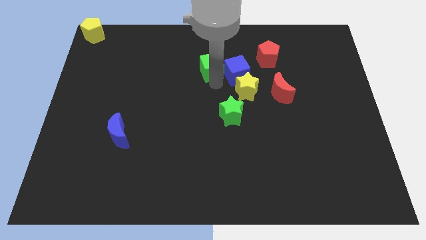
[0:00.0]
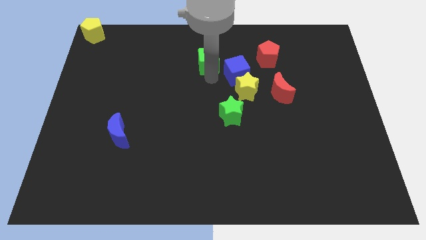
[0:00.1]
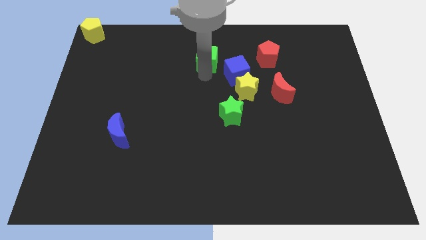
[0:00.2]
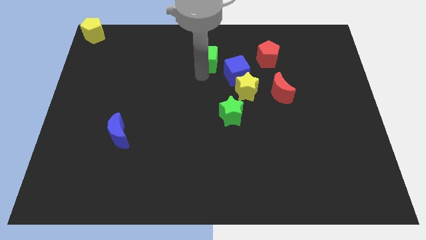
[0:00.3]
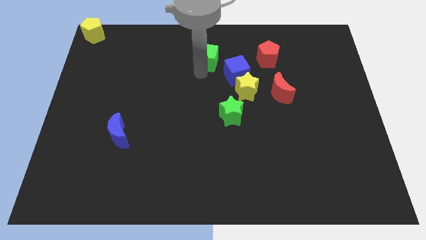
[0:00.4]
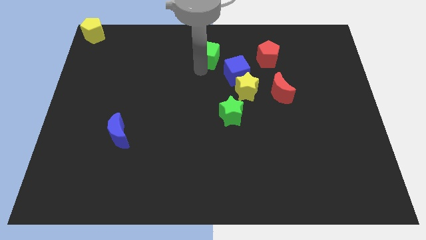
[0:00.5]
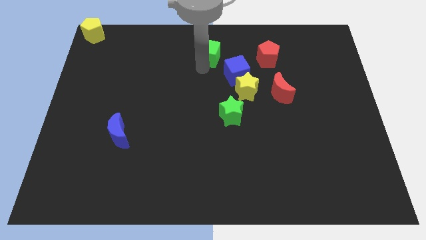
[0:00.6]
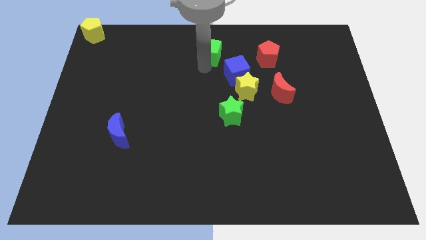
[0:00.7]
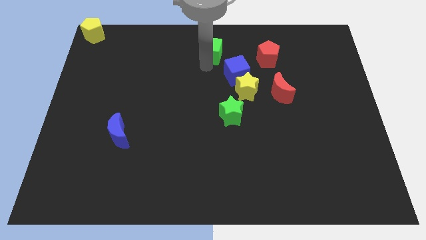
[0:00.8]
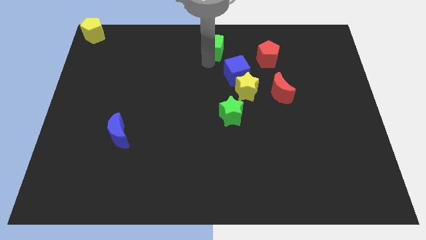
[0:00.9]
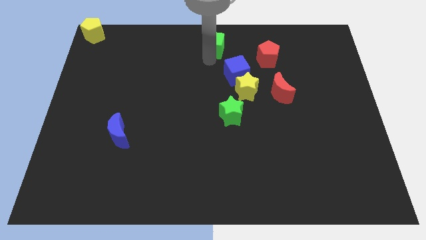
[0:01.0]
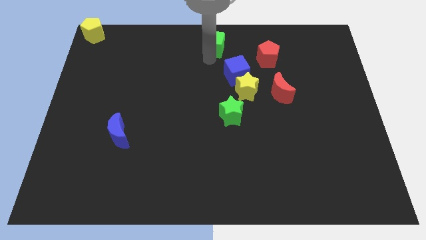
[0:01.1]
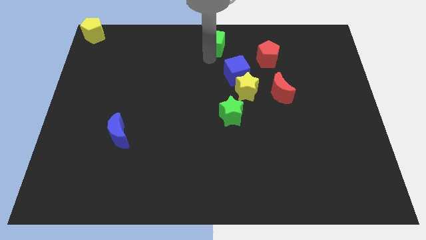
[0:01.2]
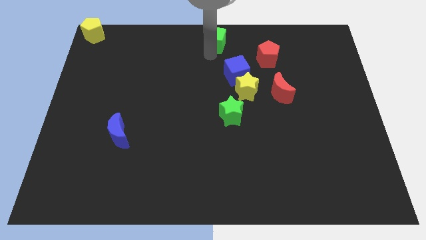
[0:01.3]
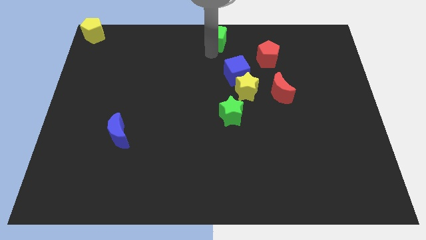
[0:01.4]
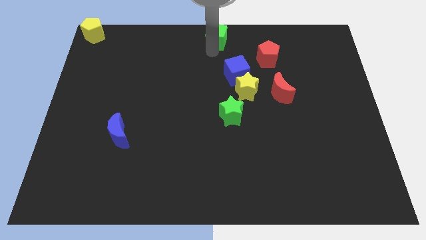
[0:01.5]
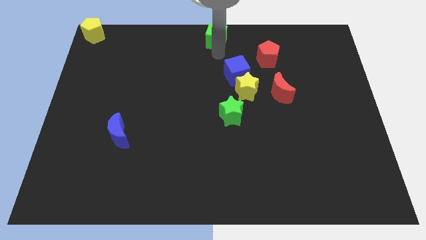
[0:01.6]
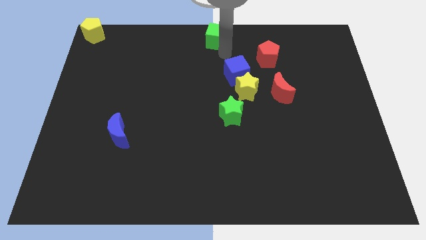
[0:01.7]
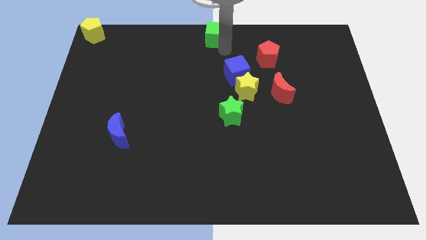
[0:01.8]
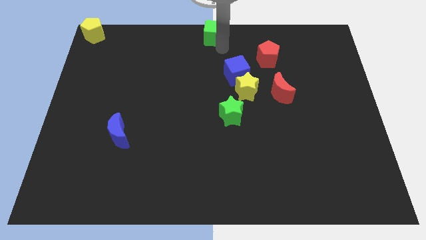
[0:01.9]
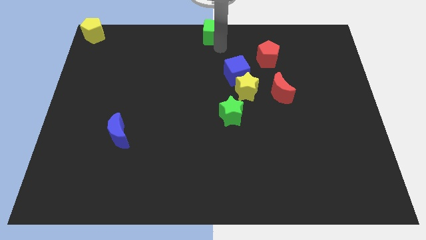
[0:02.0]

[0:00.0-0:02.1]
move green cube to the top center

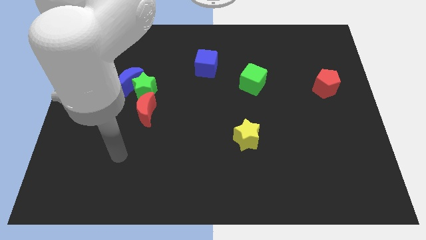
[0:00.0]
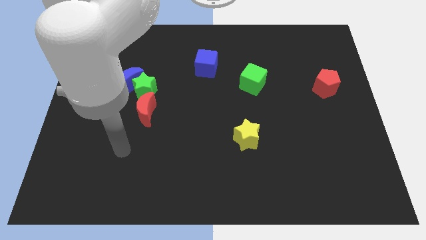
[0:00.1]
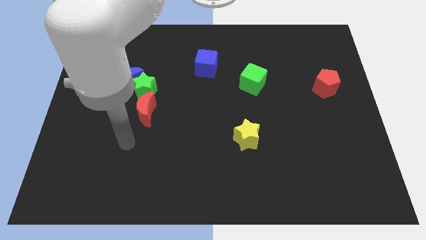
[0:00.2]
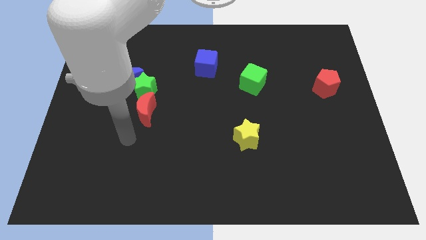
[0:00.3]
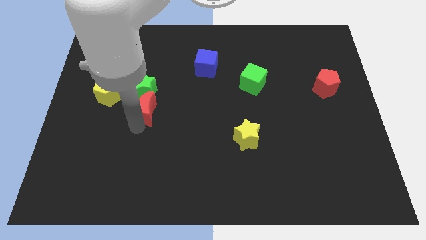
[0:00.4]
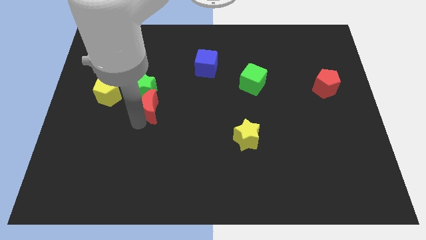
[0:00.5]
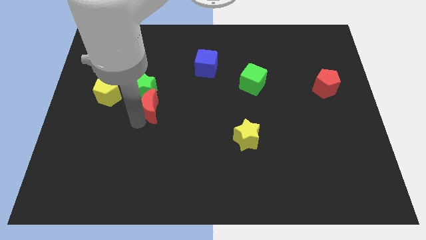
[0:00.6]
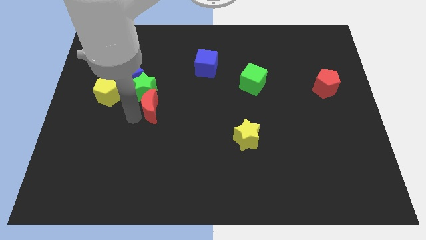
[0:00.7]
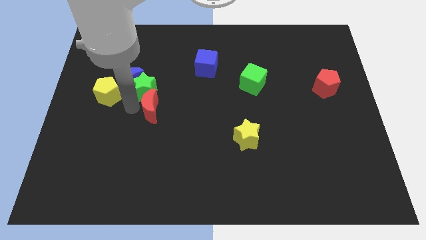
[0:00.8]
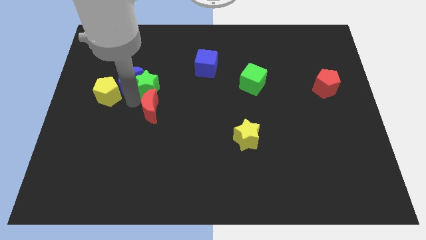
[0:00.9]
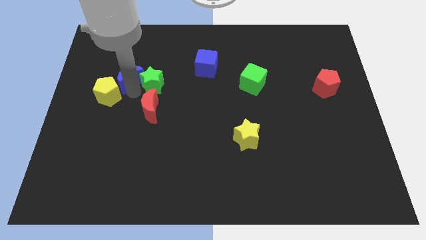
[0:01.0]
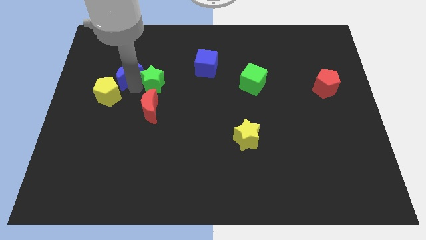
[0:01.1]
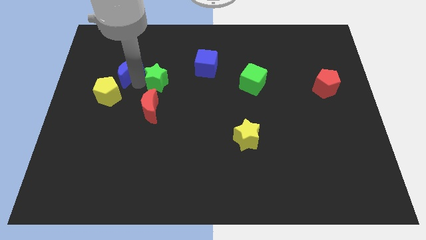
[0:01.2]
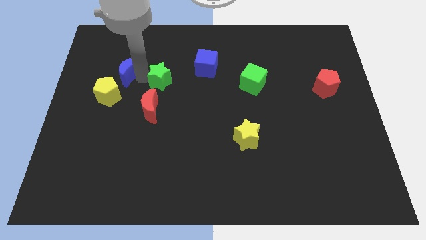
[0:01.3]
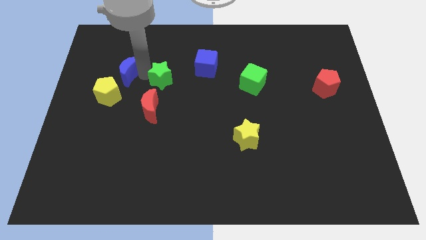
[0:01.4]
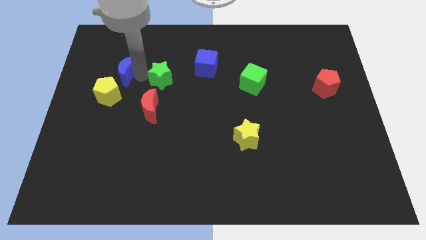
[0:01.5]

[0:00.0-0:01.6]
separate the green star and the blue moon

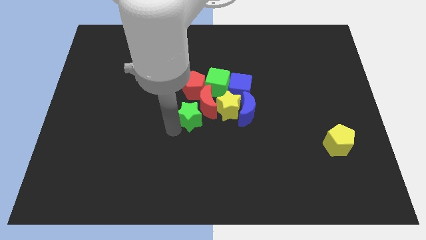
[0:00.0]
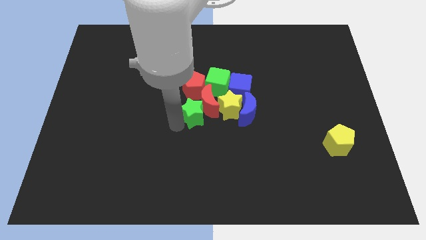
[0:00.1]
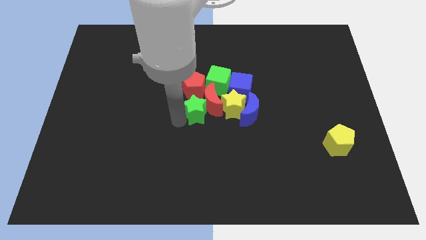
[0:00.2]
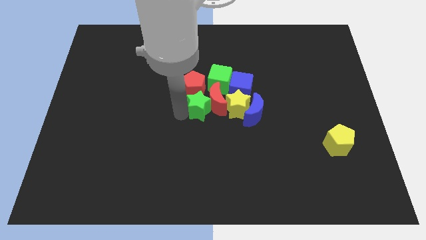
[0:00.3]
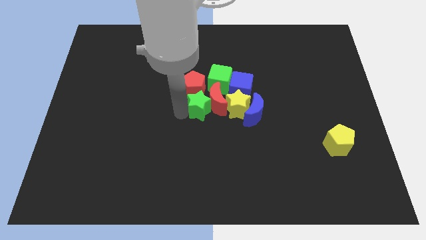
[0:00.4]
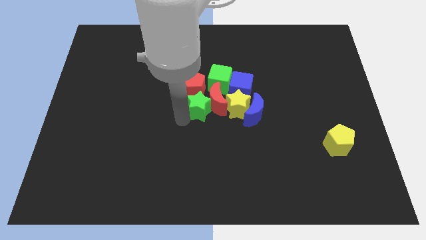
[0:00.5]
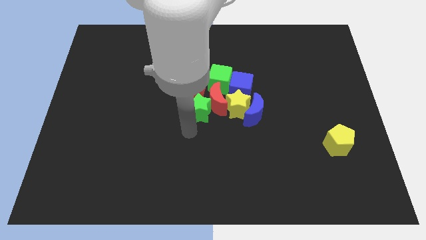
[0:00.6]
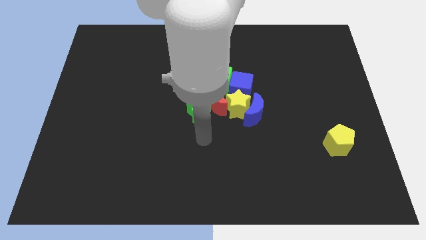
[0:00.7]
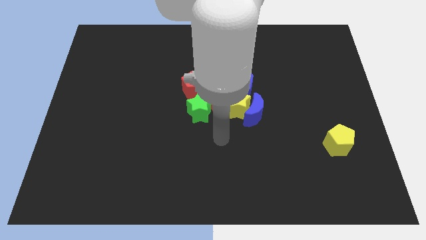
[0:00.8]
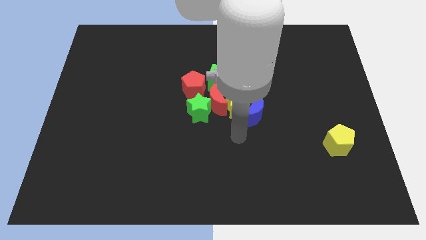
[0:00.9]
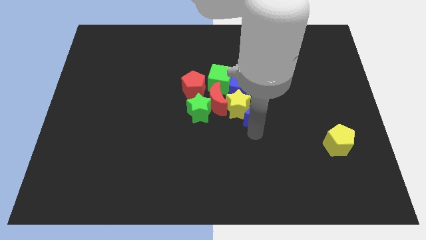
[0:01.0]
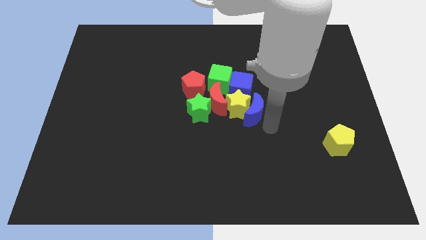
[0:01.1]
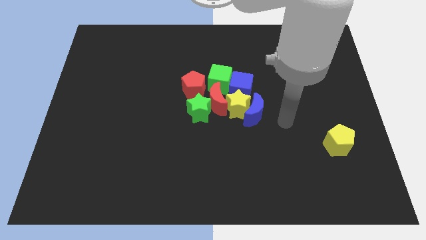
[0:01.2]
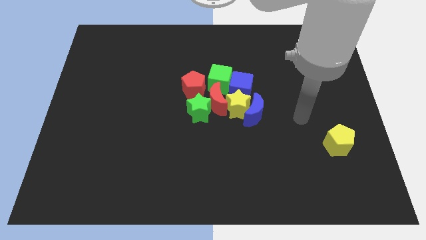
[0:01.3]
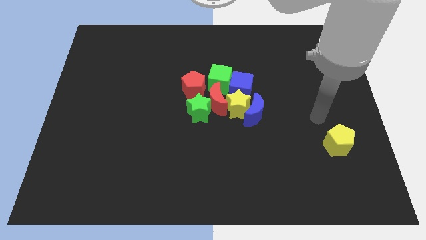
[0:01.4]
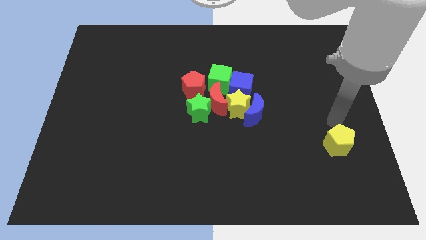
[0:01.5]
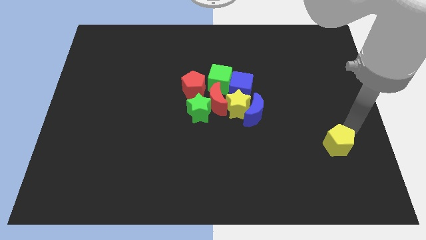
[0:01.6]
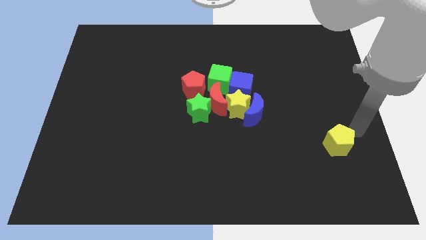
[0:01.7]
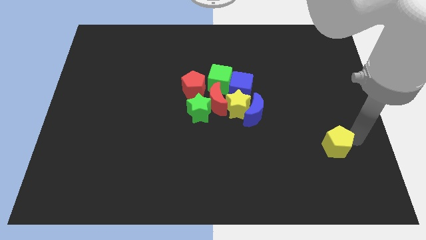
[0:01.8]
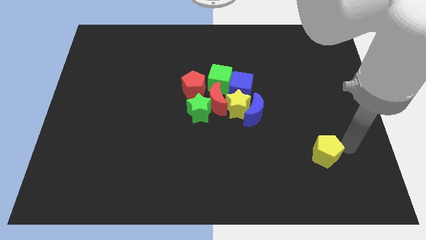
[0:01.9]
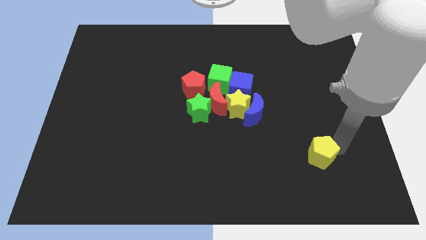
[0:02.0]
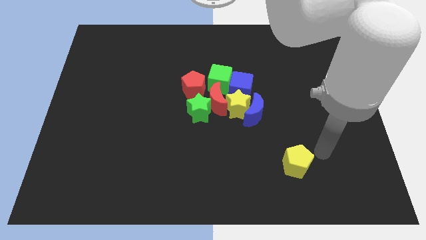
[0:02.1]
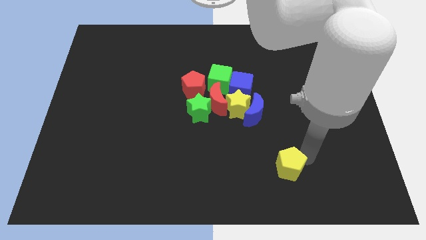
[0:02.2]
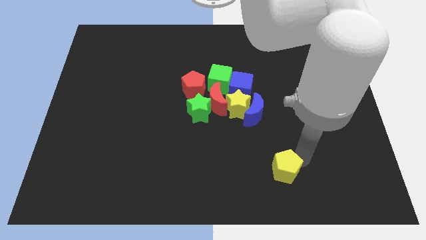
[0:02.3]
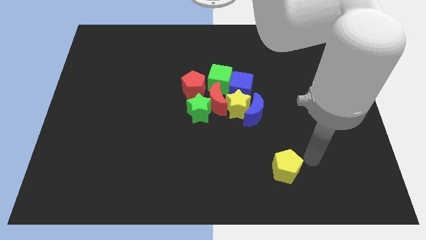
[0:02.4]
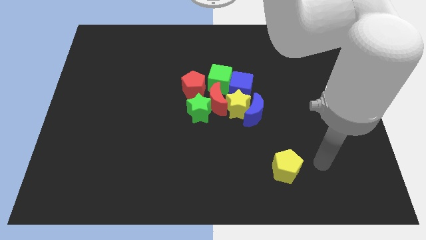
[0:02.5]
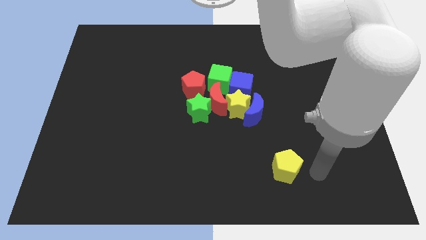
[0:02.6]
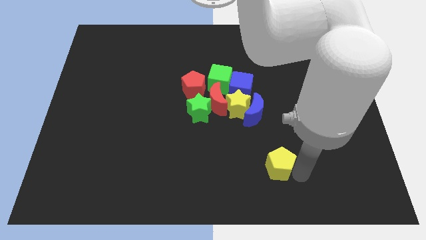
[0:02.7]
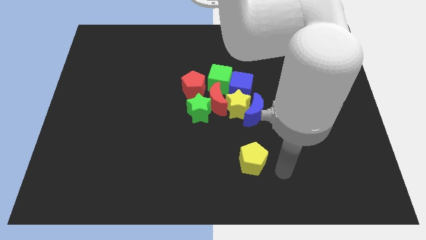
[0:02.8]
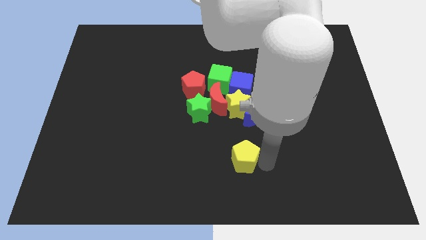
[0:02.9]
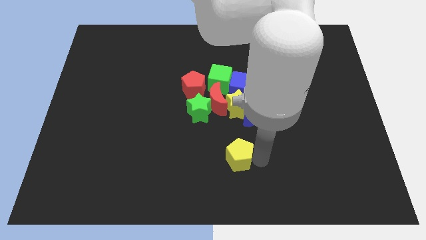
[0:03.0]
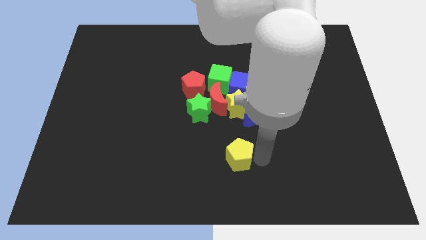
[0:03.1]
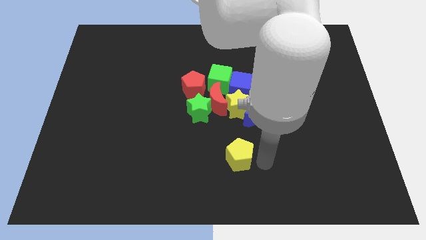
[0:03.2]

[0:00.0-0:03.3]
place the yellow pentago below the other blocks

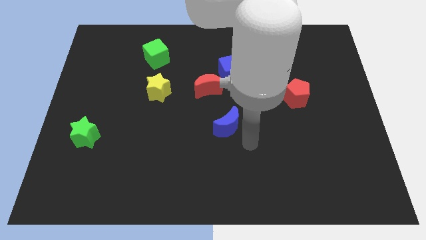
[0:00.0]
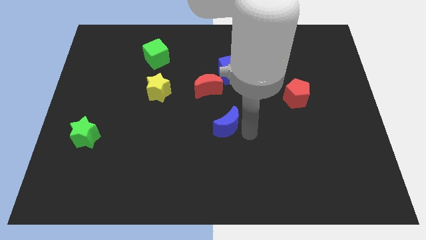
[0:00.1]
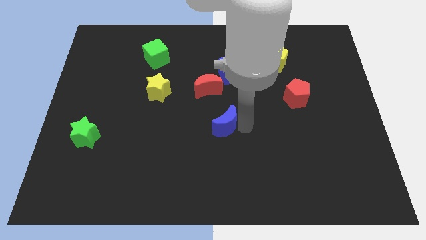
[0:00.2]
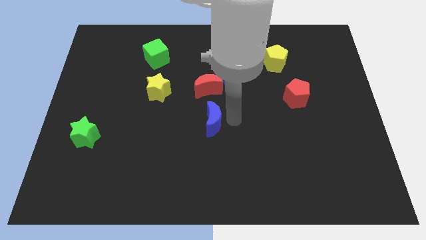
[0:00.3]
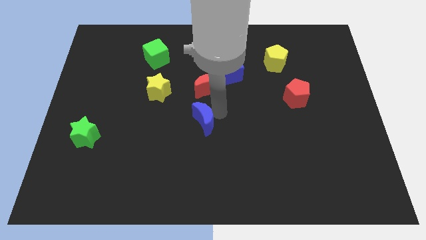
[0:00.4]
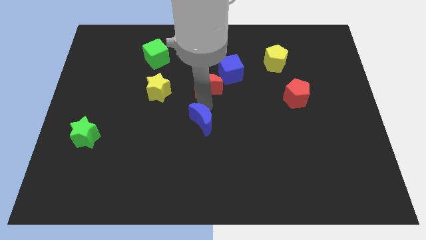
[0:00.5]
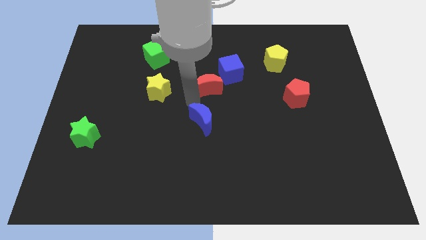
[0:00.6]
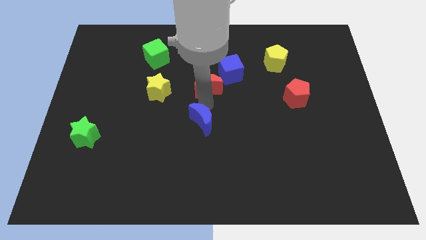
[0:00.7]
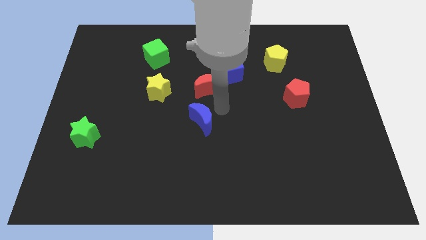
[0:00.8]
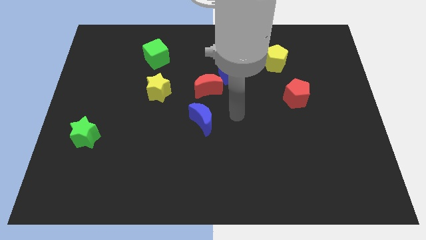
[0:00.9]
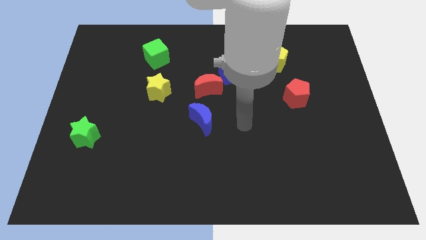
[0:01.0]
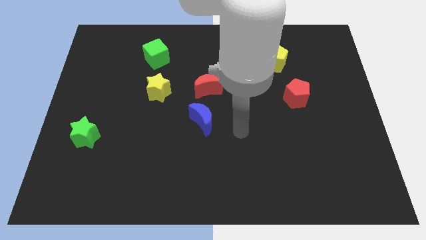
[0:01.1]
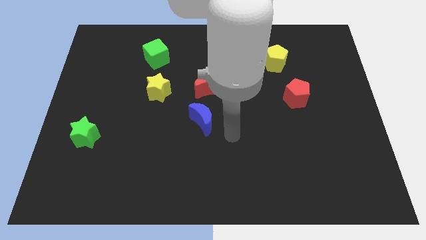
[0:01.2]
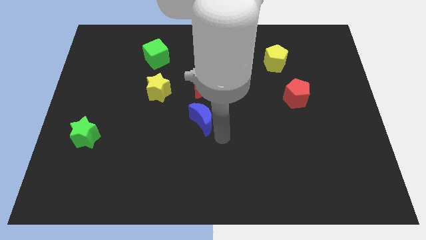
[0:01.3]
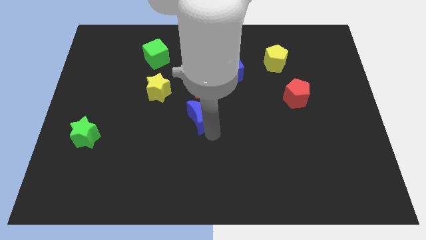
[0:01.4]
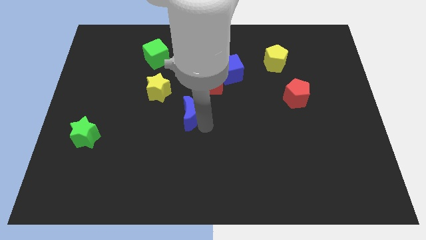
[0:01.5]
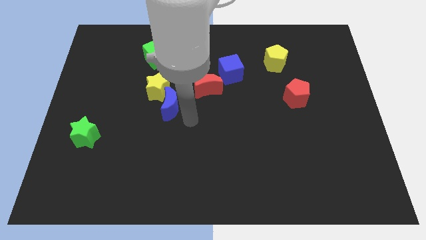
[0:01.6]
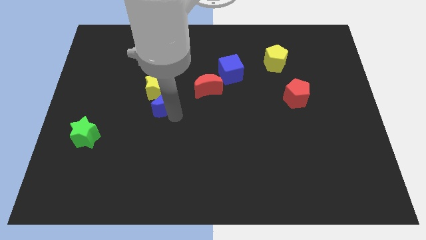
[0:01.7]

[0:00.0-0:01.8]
attach the blue moon to the yellow star

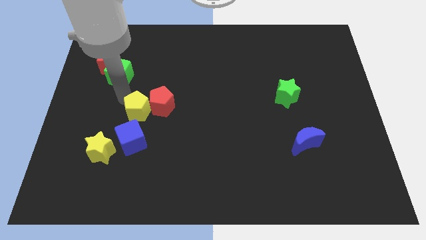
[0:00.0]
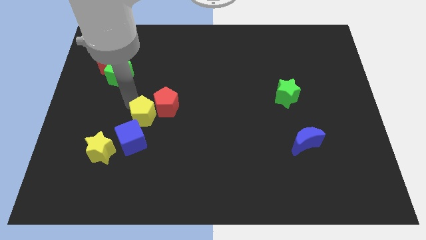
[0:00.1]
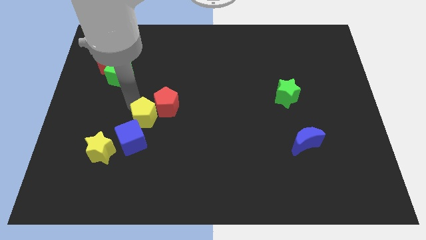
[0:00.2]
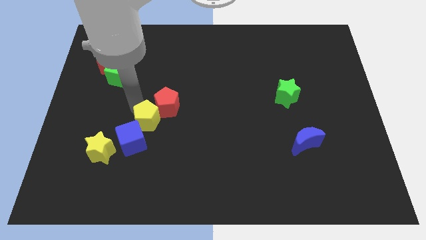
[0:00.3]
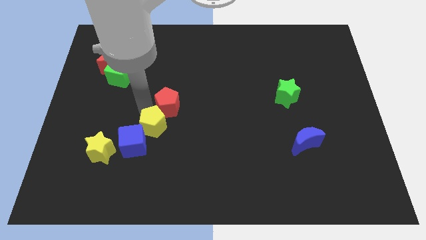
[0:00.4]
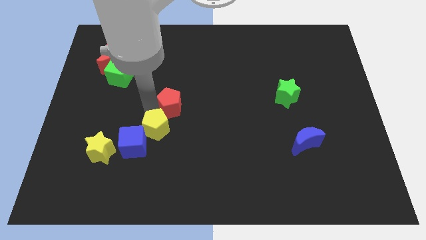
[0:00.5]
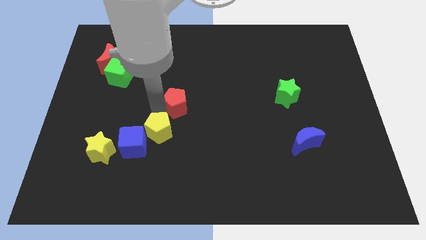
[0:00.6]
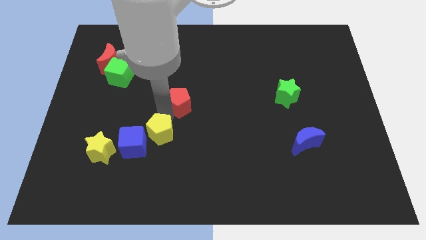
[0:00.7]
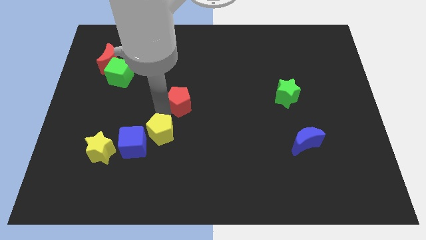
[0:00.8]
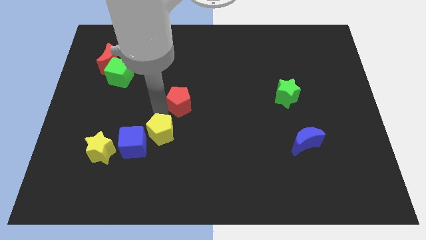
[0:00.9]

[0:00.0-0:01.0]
push the yellow pentagon away from the red pentagon
